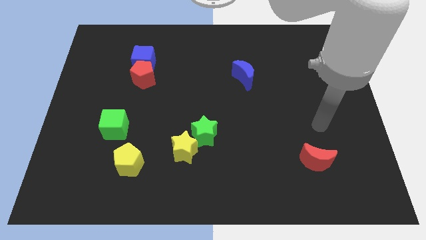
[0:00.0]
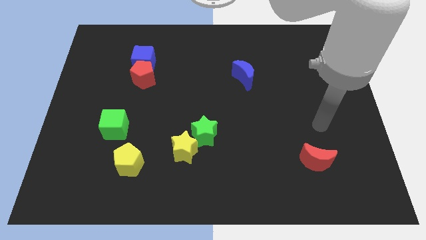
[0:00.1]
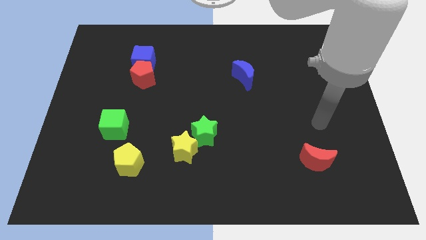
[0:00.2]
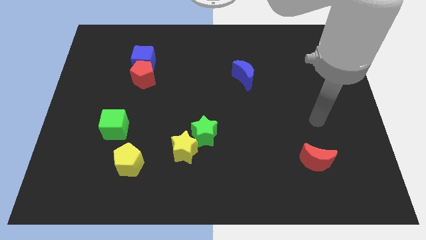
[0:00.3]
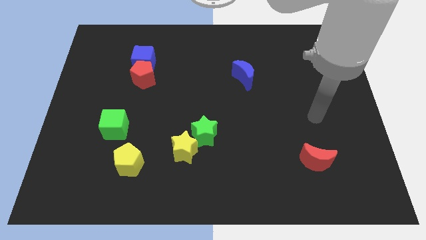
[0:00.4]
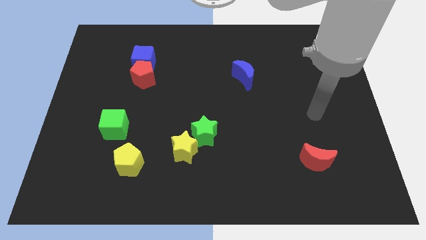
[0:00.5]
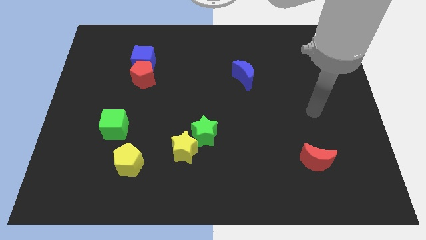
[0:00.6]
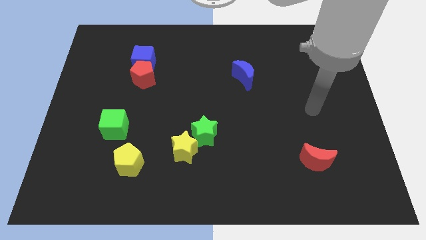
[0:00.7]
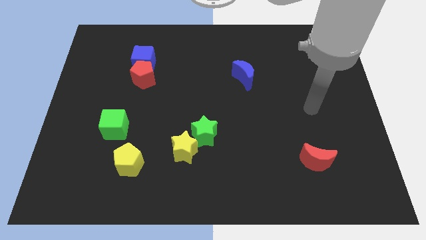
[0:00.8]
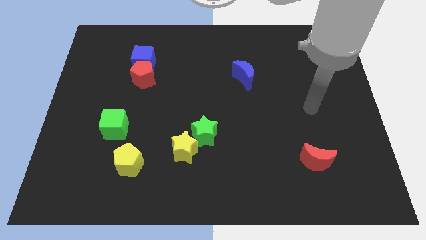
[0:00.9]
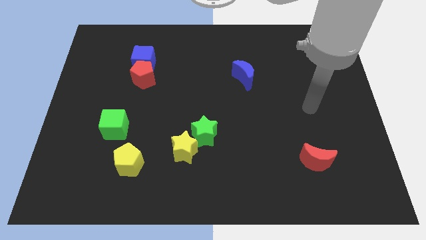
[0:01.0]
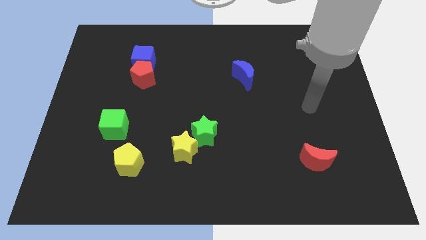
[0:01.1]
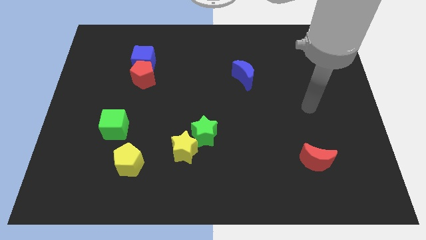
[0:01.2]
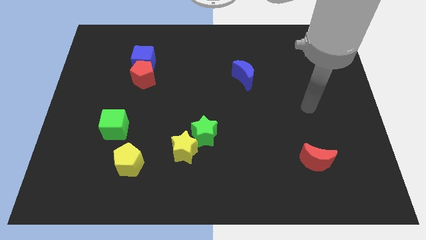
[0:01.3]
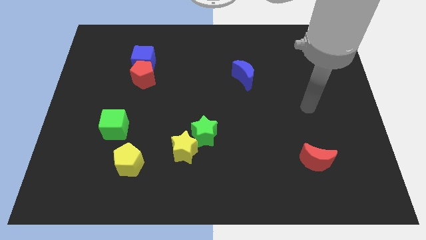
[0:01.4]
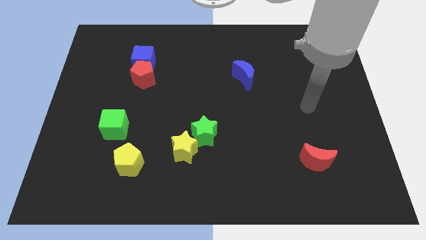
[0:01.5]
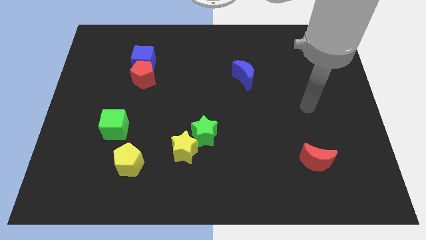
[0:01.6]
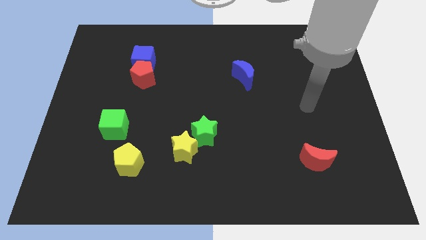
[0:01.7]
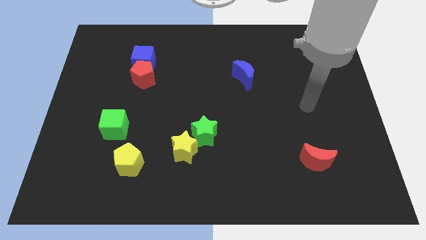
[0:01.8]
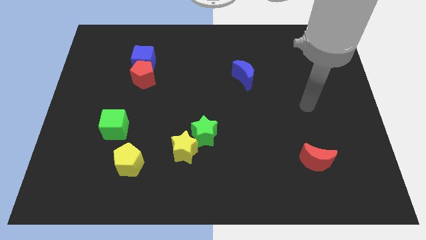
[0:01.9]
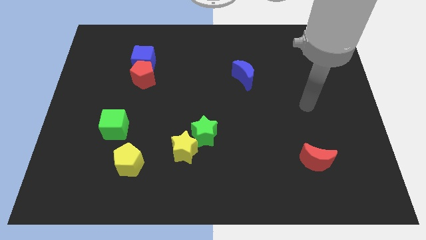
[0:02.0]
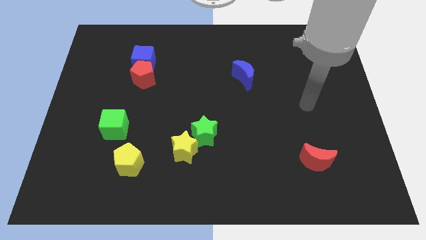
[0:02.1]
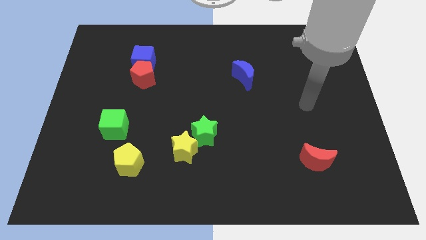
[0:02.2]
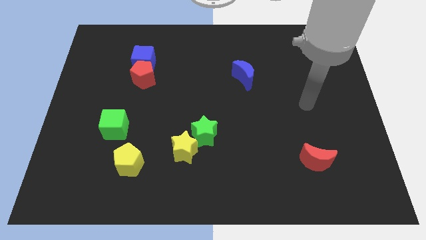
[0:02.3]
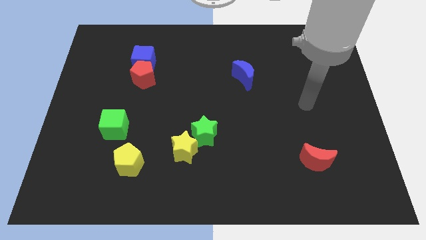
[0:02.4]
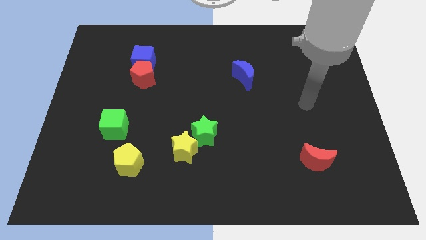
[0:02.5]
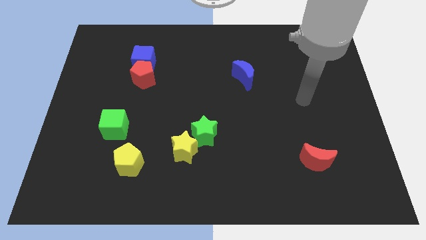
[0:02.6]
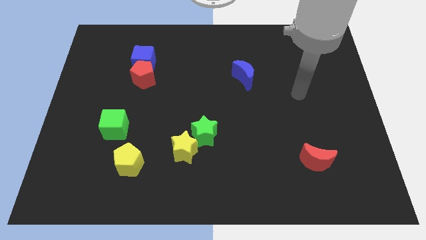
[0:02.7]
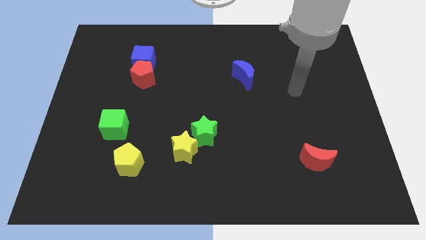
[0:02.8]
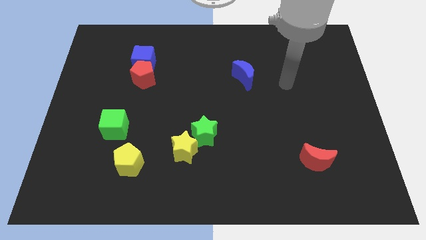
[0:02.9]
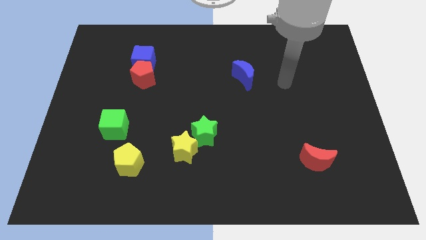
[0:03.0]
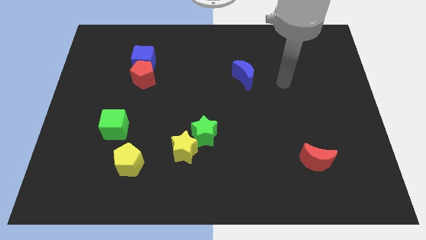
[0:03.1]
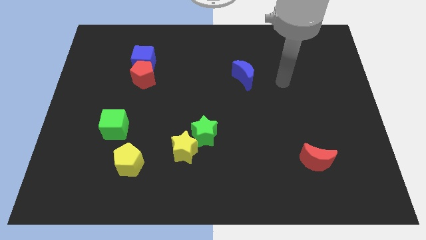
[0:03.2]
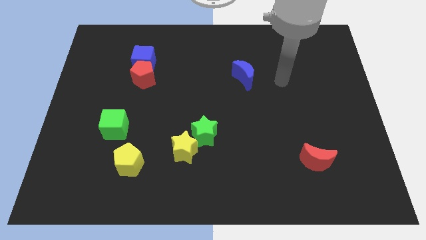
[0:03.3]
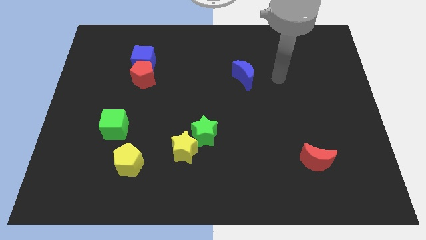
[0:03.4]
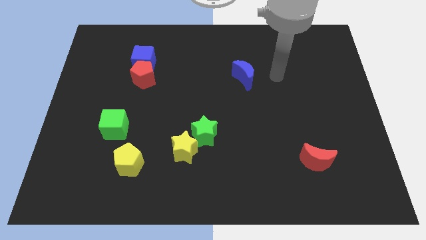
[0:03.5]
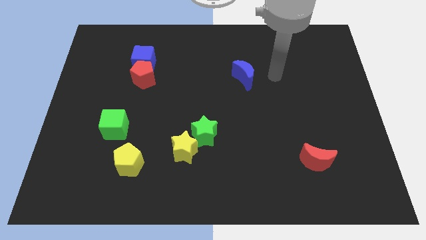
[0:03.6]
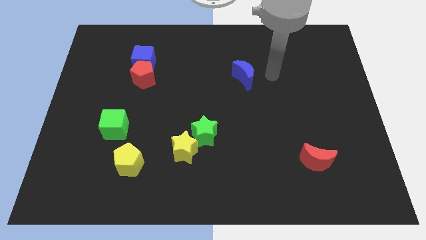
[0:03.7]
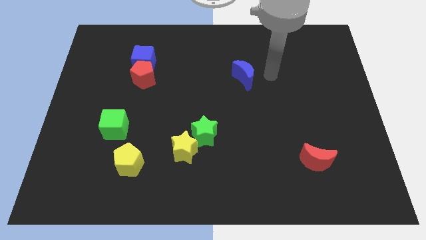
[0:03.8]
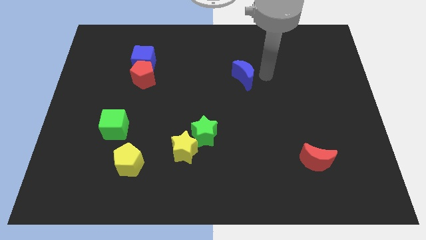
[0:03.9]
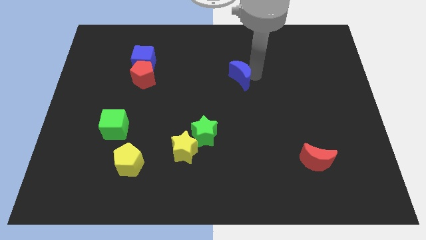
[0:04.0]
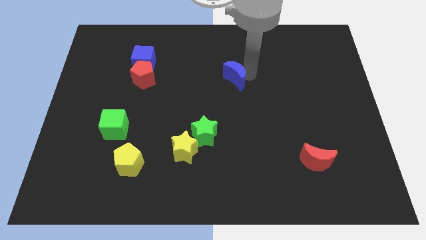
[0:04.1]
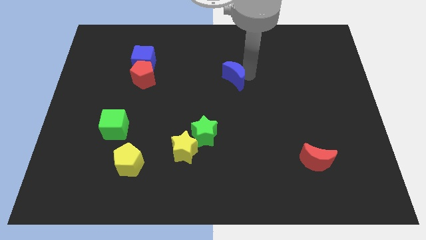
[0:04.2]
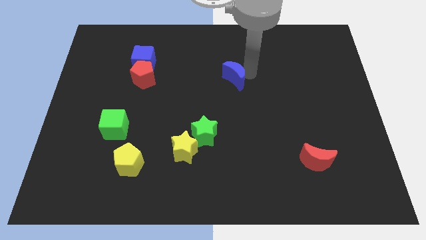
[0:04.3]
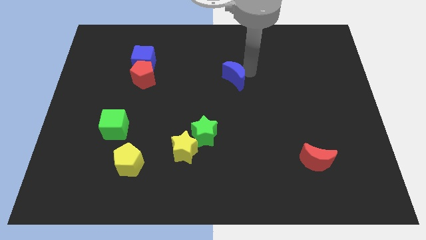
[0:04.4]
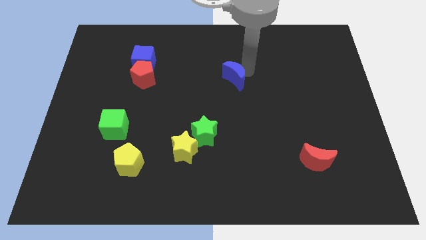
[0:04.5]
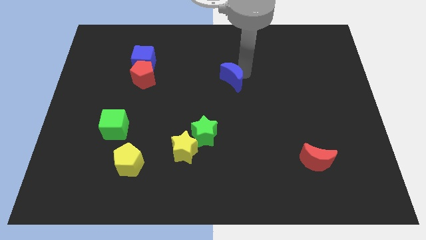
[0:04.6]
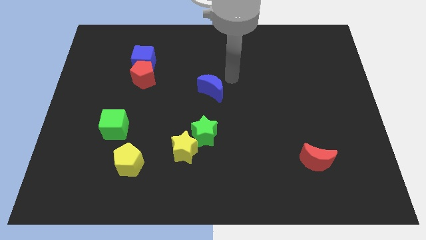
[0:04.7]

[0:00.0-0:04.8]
place your arm to the right of blue moon

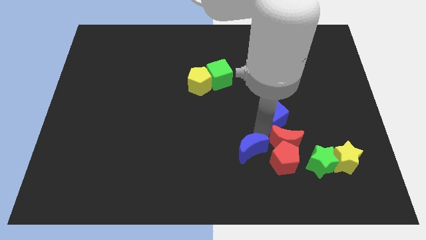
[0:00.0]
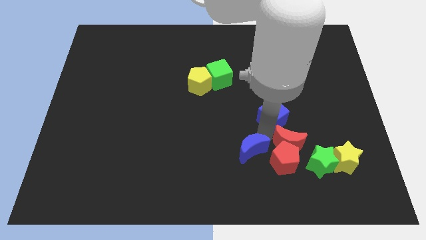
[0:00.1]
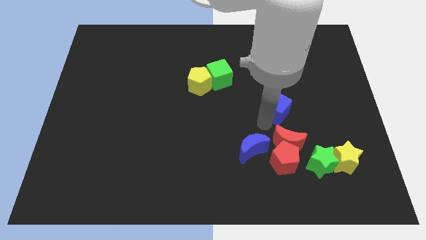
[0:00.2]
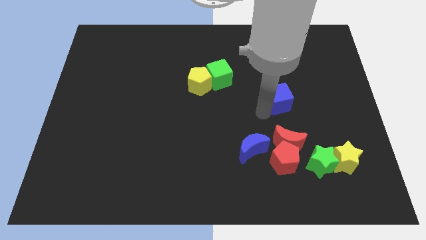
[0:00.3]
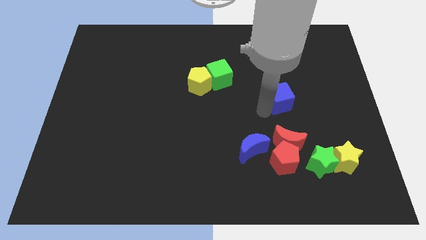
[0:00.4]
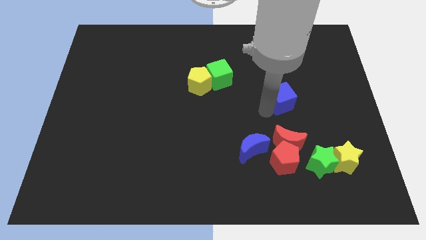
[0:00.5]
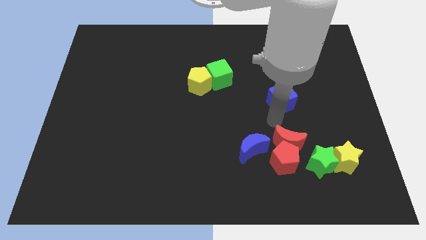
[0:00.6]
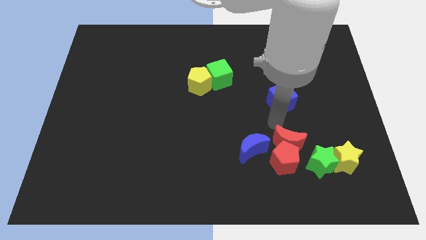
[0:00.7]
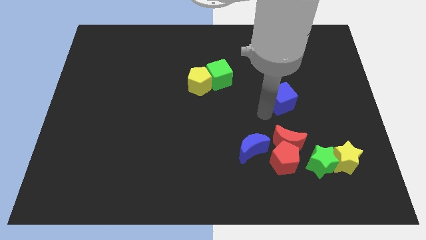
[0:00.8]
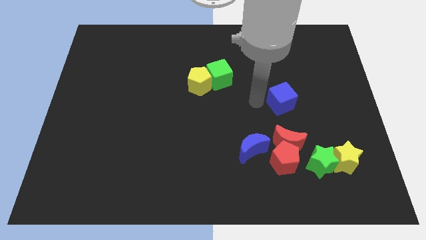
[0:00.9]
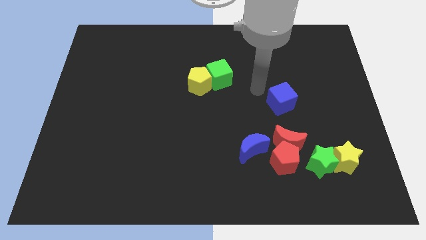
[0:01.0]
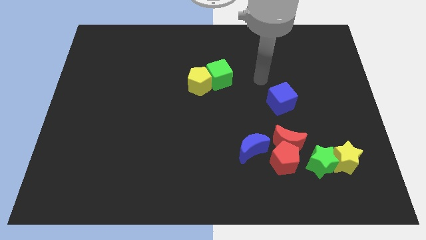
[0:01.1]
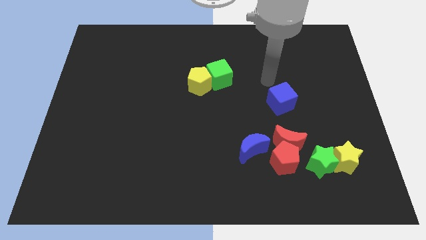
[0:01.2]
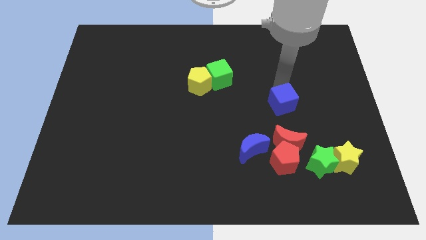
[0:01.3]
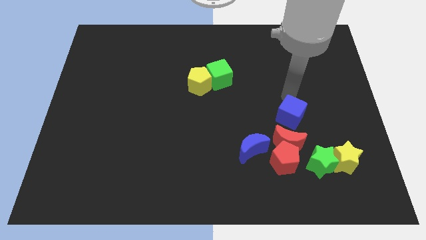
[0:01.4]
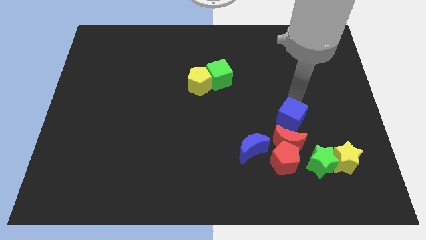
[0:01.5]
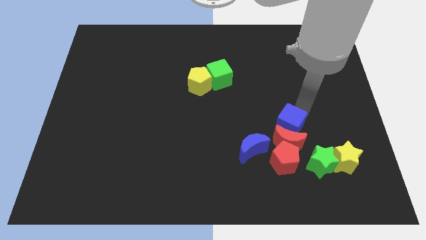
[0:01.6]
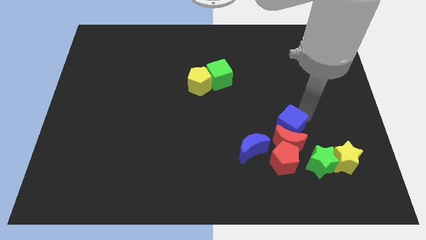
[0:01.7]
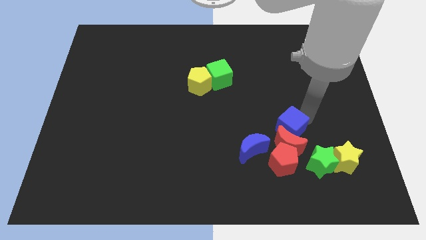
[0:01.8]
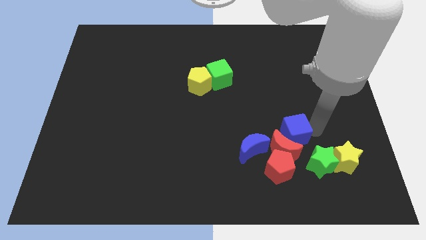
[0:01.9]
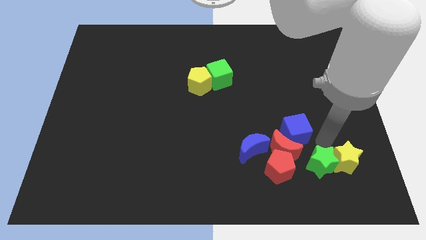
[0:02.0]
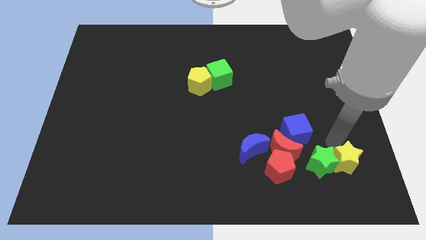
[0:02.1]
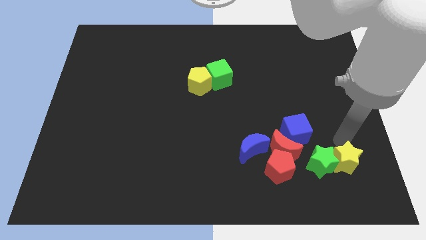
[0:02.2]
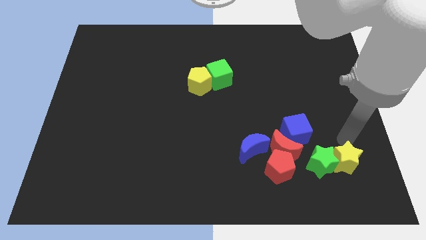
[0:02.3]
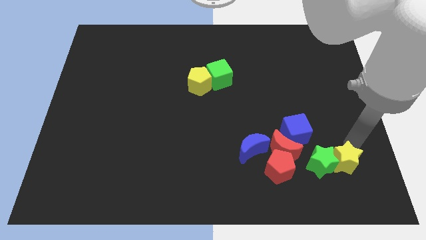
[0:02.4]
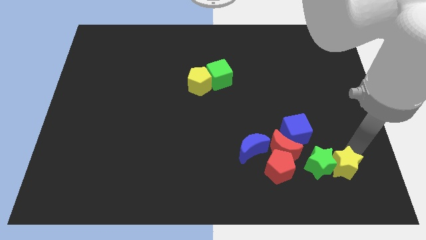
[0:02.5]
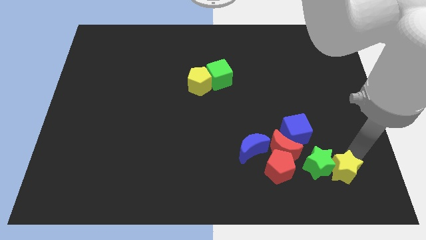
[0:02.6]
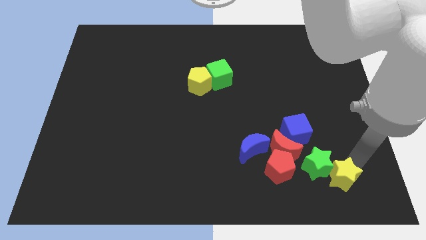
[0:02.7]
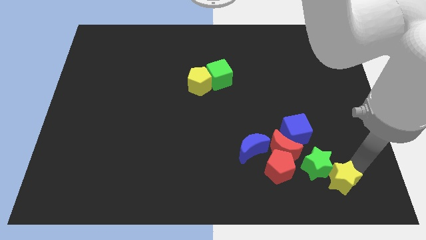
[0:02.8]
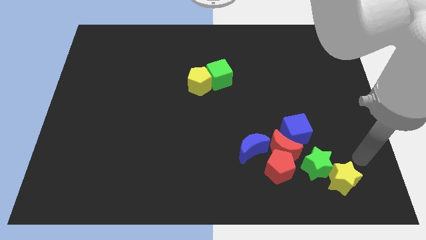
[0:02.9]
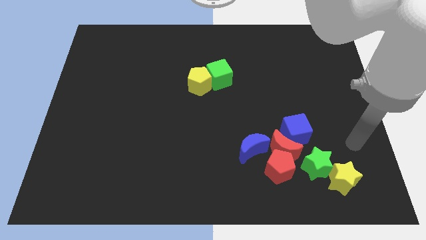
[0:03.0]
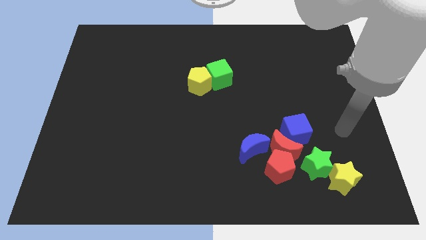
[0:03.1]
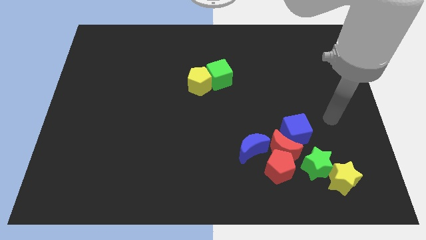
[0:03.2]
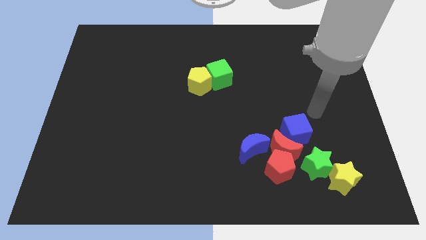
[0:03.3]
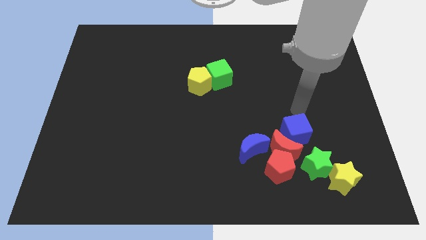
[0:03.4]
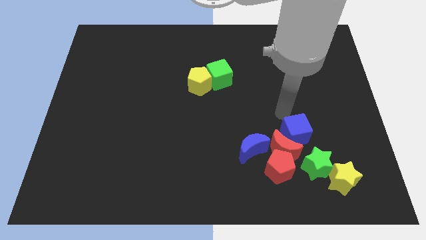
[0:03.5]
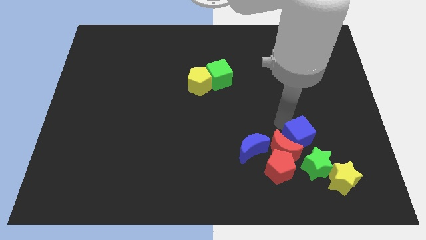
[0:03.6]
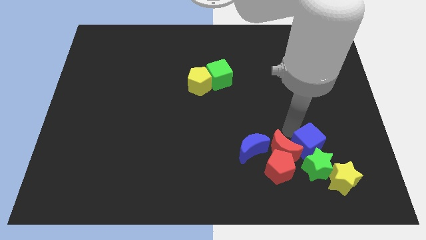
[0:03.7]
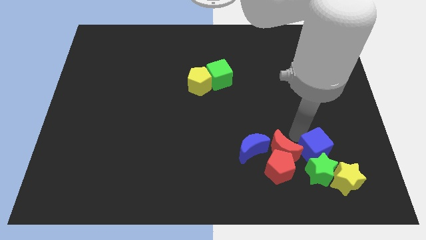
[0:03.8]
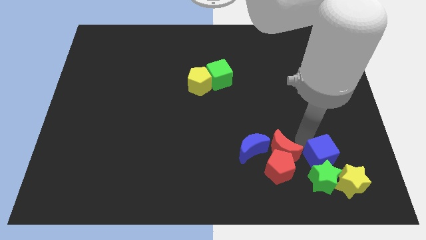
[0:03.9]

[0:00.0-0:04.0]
push the blue cube into the group of blocks

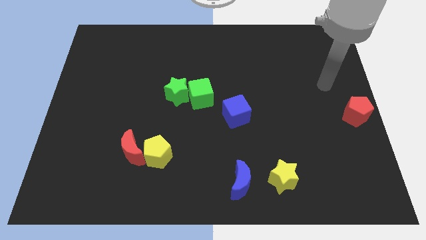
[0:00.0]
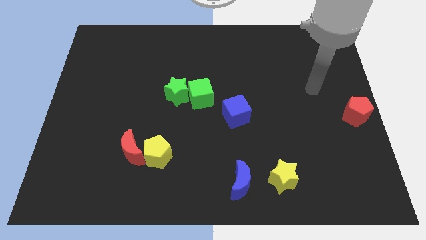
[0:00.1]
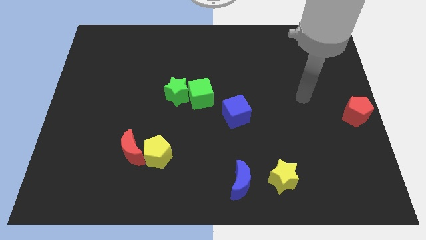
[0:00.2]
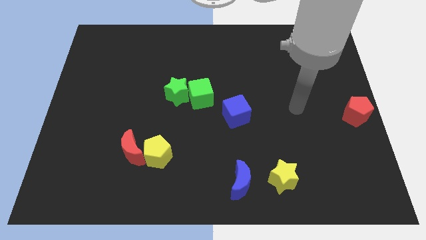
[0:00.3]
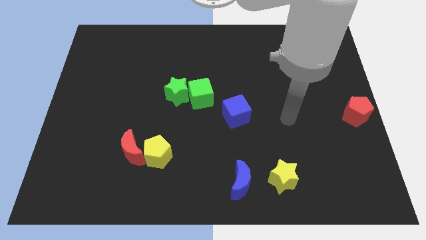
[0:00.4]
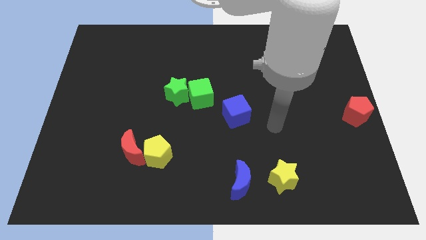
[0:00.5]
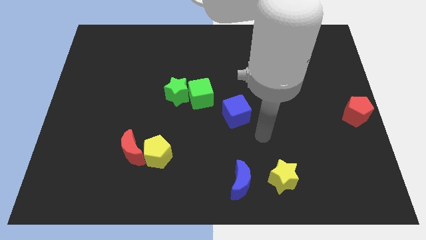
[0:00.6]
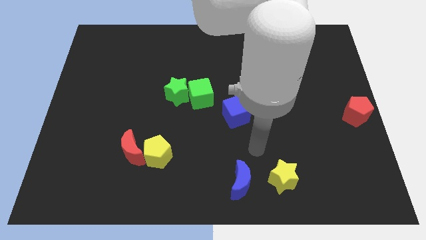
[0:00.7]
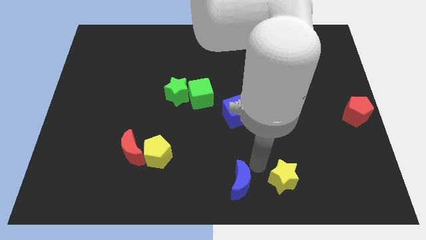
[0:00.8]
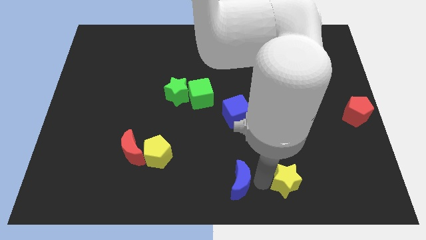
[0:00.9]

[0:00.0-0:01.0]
place your arm to the left of yellow star
